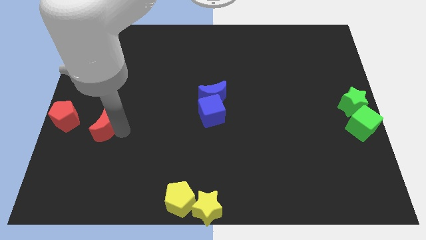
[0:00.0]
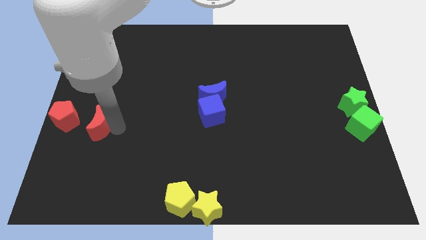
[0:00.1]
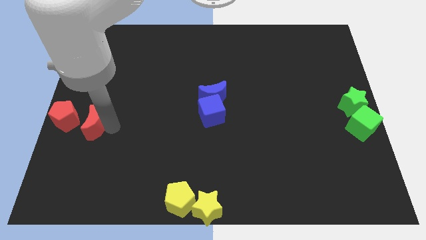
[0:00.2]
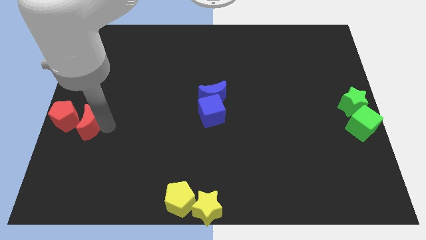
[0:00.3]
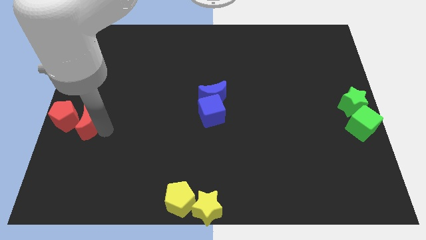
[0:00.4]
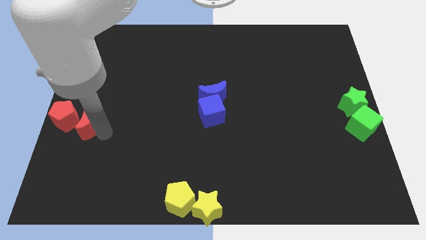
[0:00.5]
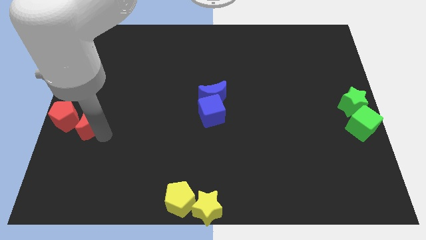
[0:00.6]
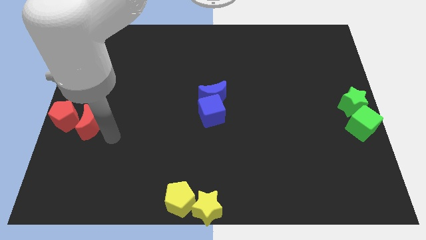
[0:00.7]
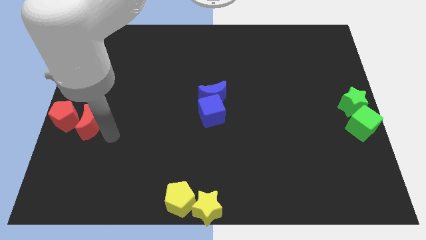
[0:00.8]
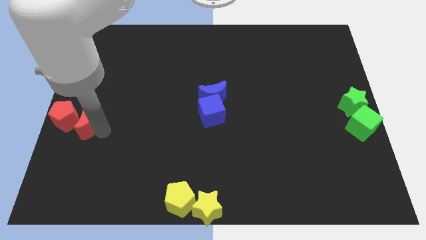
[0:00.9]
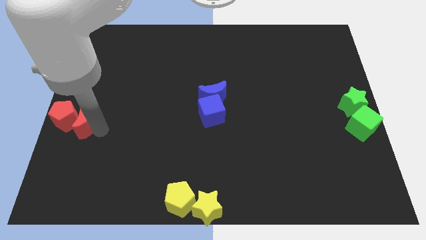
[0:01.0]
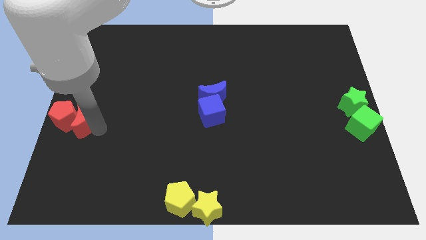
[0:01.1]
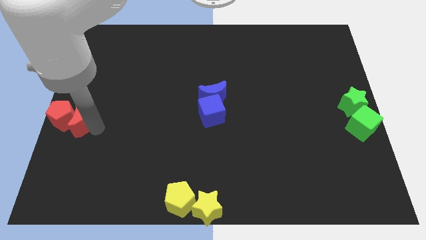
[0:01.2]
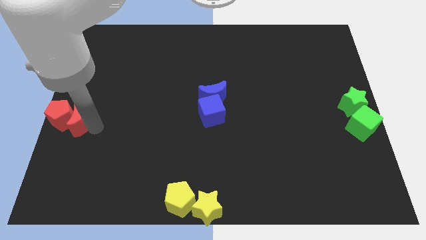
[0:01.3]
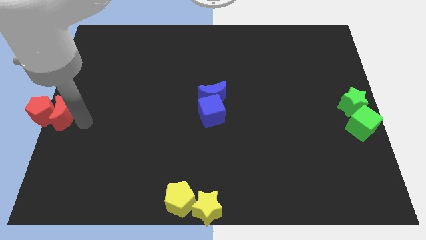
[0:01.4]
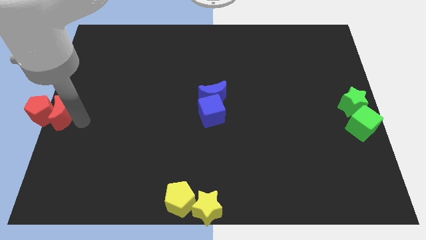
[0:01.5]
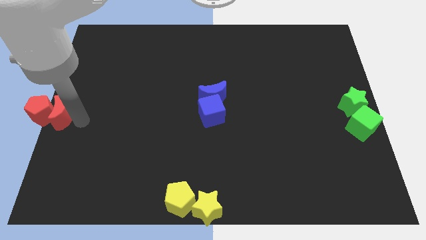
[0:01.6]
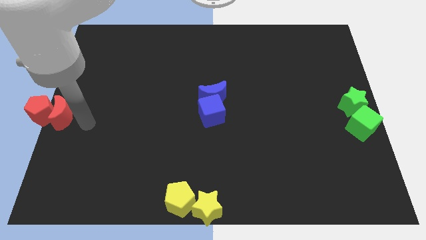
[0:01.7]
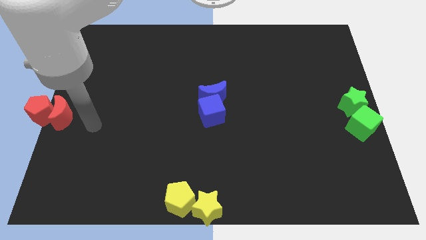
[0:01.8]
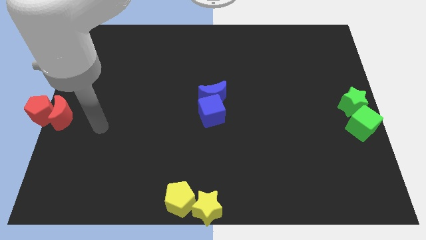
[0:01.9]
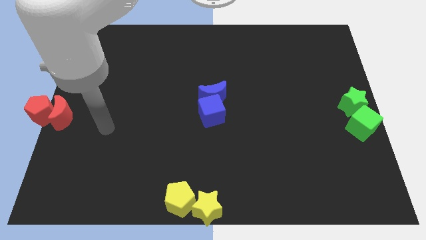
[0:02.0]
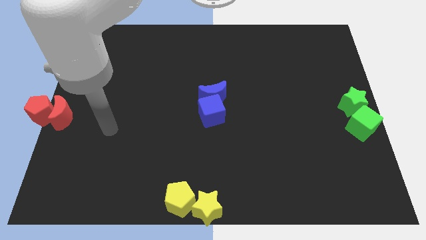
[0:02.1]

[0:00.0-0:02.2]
put the red pentagon into the red moon

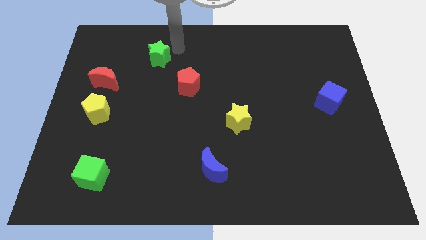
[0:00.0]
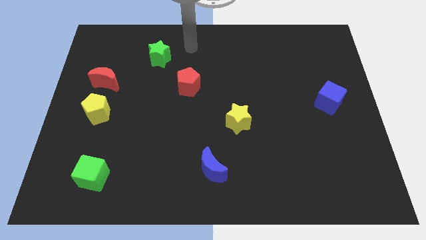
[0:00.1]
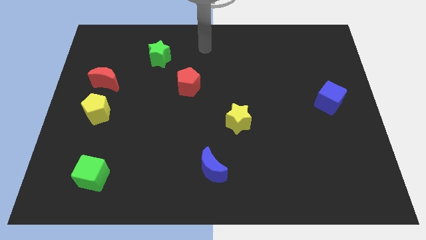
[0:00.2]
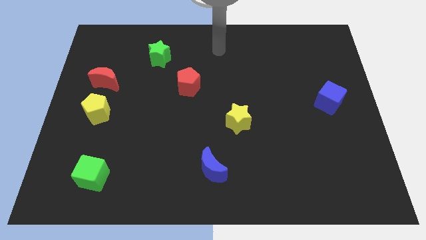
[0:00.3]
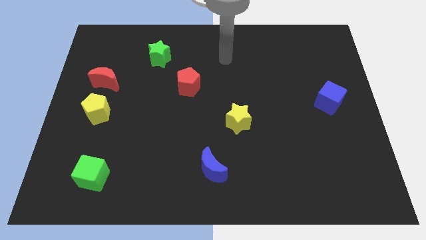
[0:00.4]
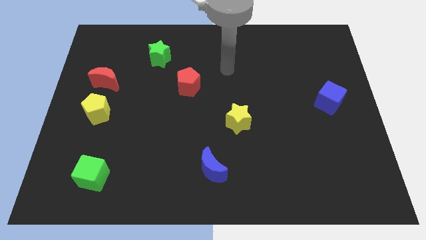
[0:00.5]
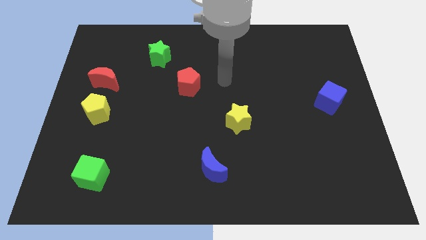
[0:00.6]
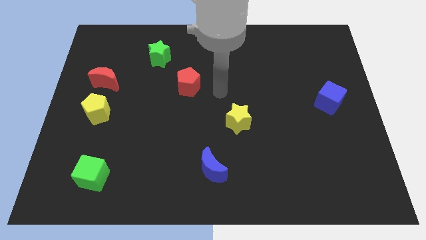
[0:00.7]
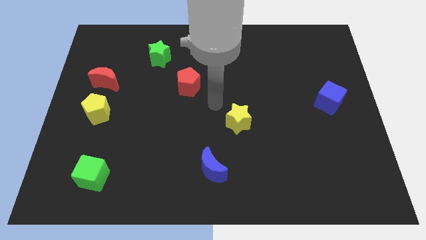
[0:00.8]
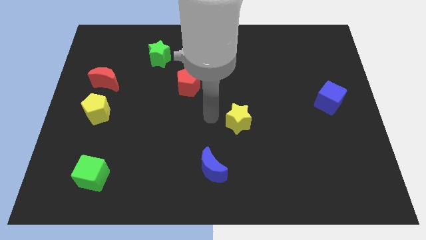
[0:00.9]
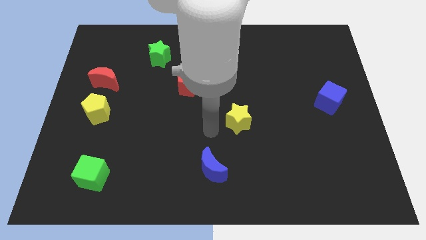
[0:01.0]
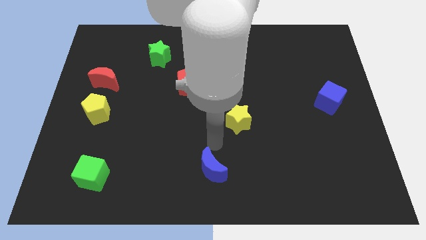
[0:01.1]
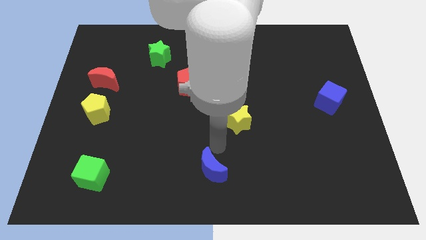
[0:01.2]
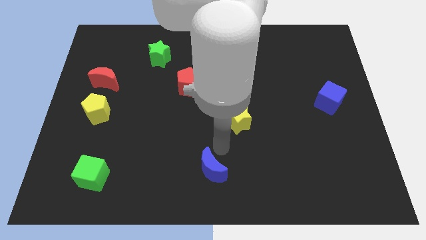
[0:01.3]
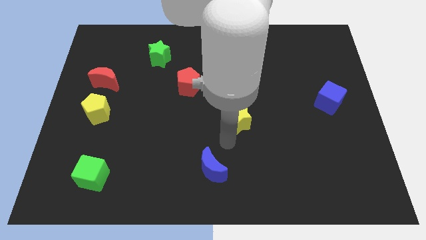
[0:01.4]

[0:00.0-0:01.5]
place your arm to the bottom of yellow star

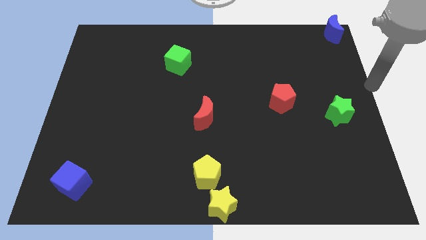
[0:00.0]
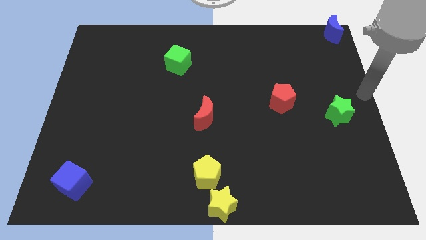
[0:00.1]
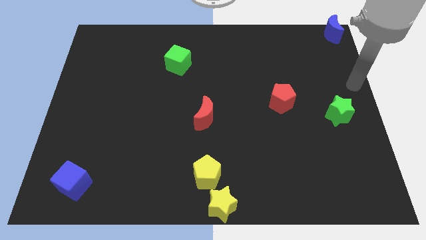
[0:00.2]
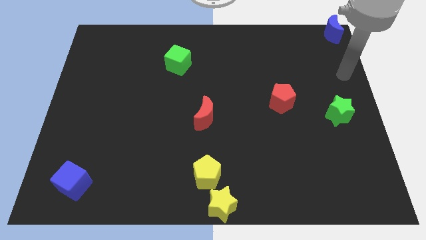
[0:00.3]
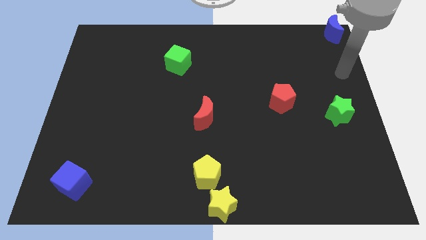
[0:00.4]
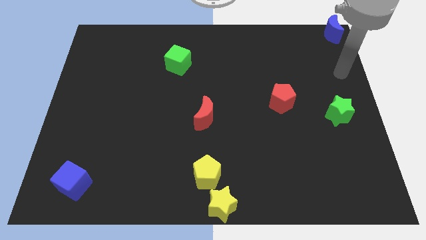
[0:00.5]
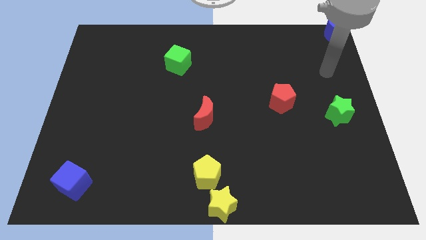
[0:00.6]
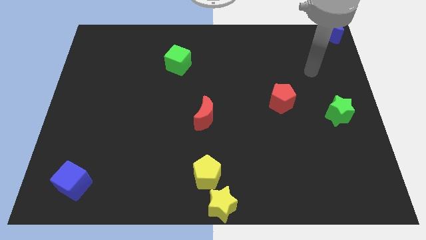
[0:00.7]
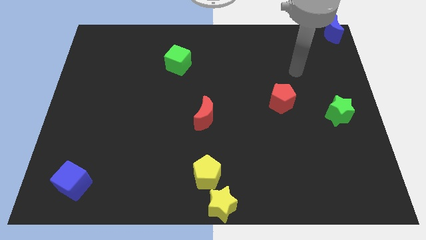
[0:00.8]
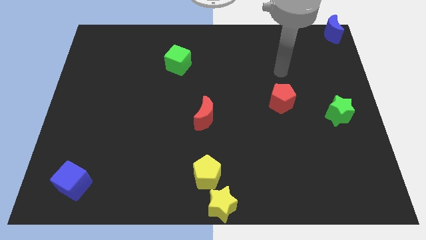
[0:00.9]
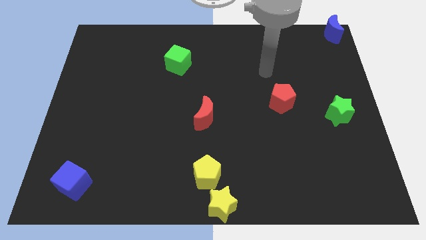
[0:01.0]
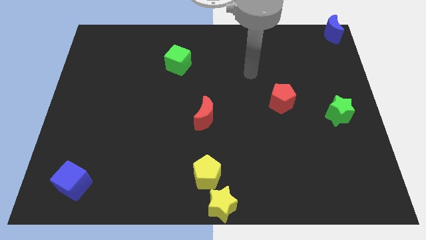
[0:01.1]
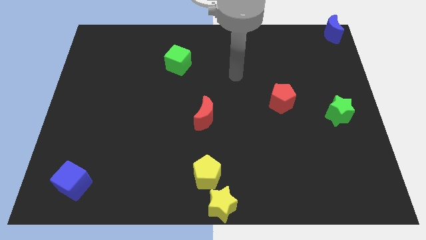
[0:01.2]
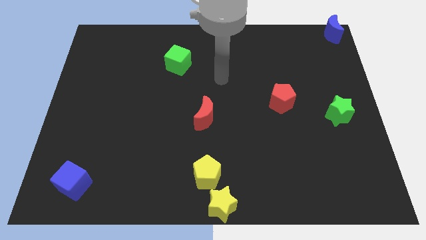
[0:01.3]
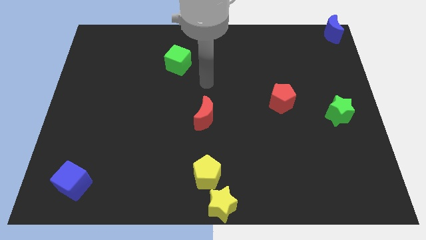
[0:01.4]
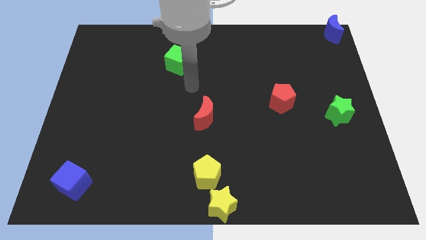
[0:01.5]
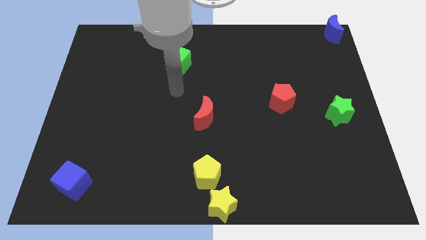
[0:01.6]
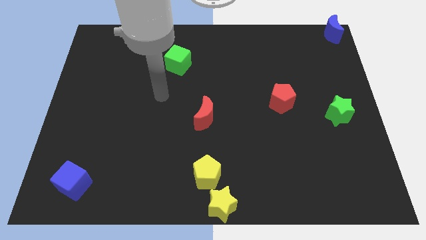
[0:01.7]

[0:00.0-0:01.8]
move your arm towards the green cube

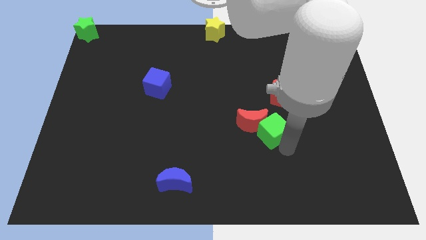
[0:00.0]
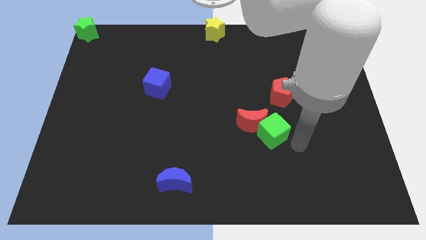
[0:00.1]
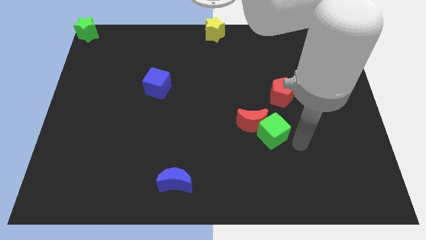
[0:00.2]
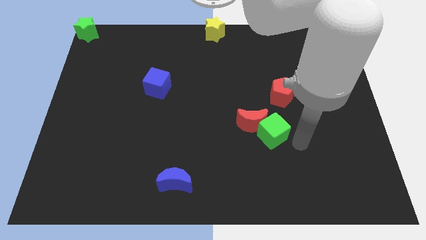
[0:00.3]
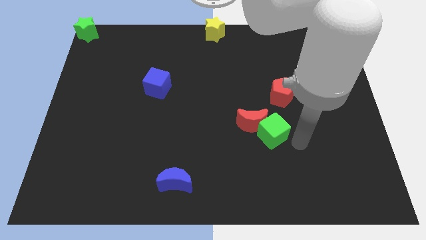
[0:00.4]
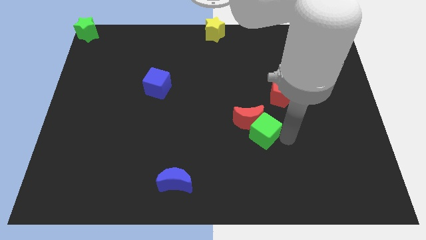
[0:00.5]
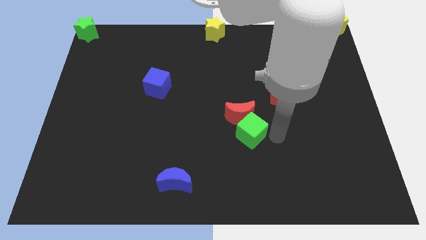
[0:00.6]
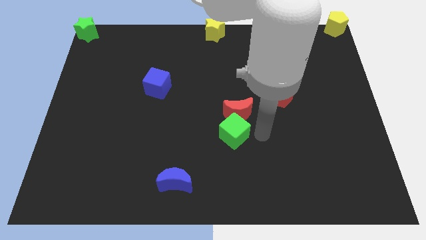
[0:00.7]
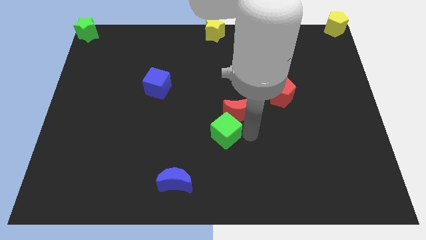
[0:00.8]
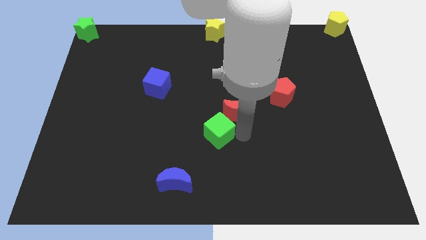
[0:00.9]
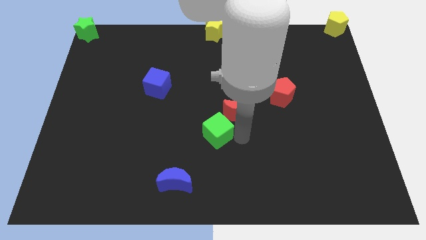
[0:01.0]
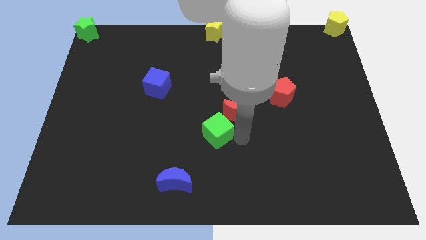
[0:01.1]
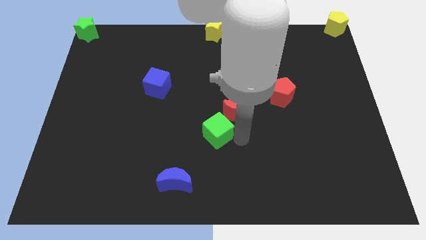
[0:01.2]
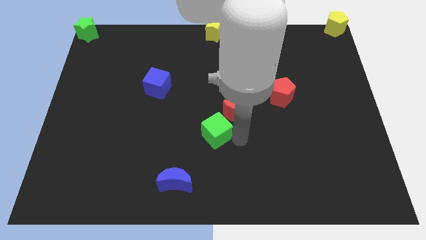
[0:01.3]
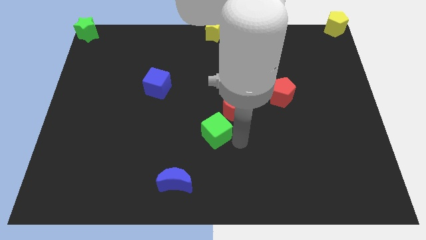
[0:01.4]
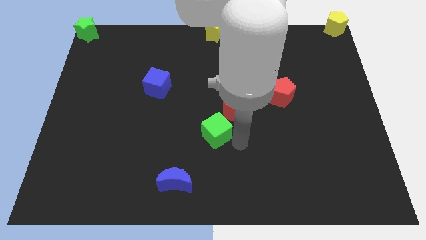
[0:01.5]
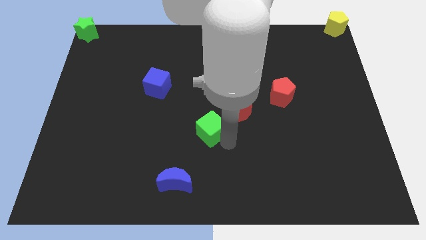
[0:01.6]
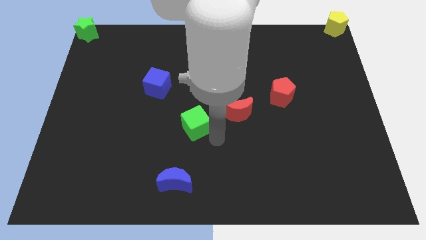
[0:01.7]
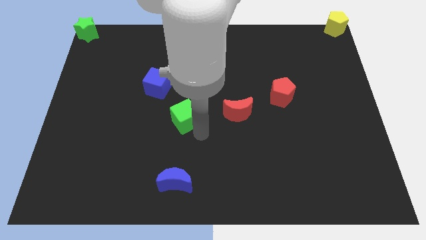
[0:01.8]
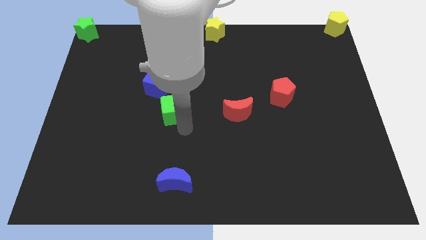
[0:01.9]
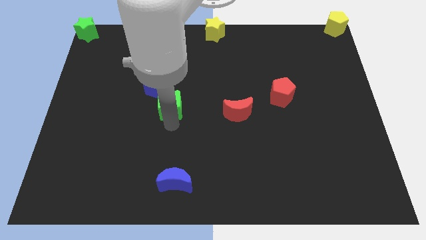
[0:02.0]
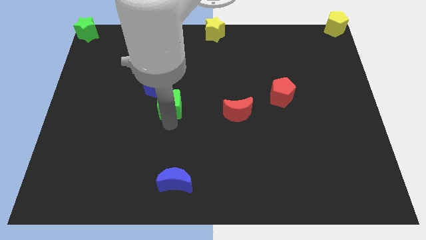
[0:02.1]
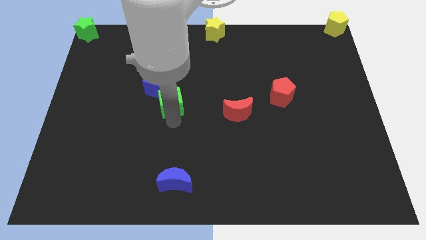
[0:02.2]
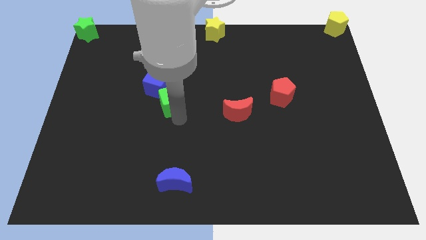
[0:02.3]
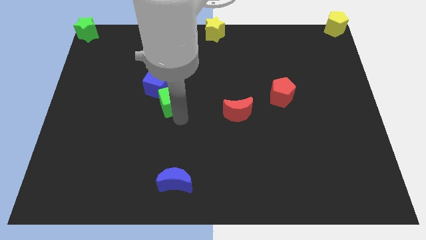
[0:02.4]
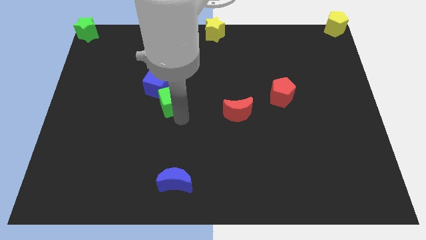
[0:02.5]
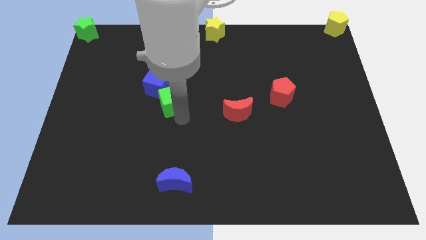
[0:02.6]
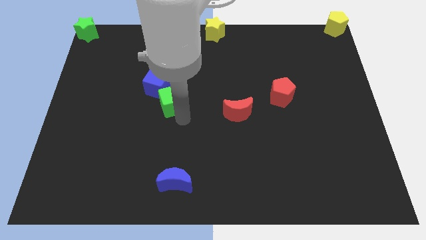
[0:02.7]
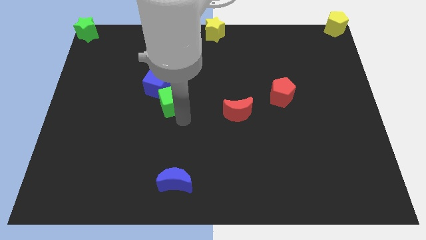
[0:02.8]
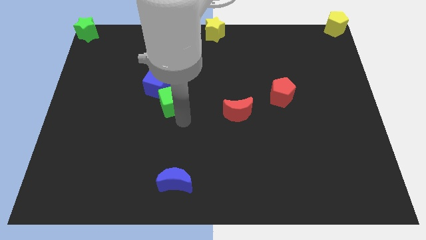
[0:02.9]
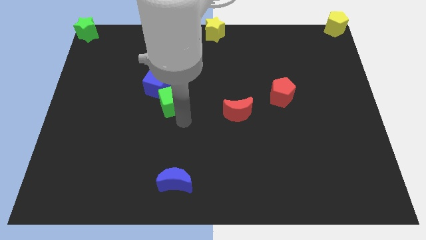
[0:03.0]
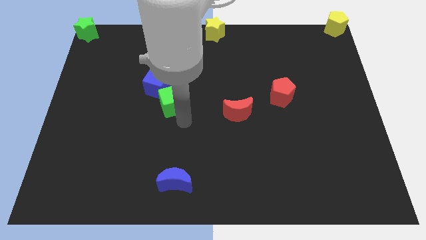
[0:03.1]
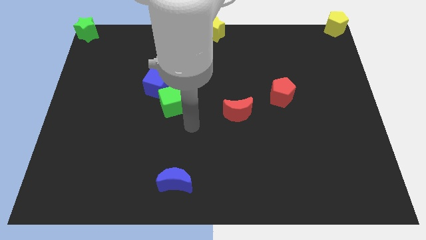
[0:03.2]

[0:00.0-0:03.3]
push the green cube to the bottom right of the blue cube

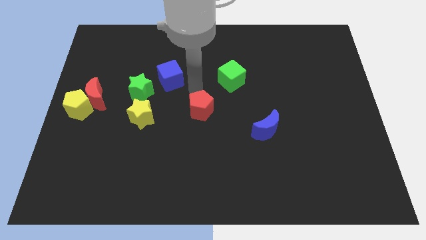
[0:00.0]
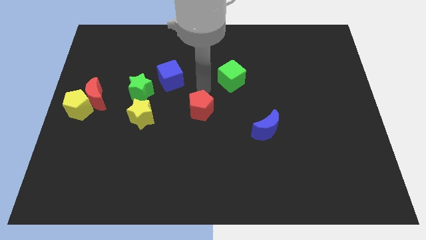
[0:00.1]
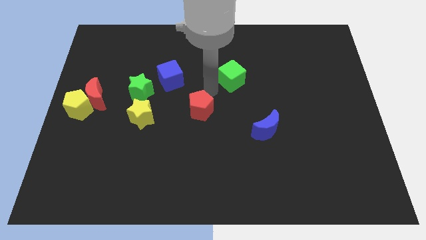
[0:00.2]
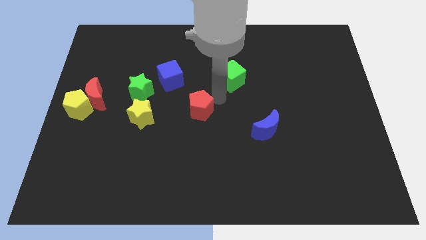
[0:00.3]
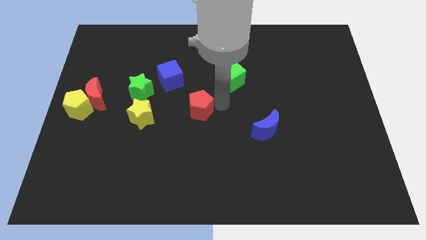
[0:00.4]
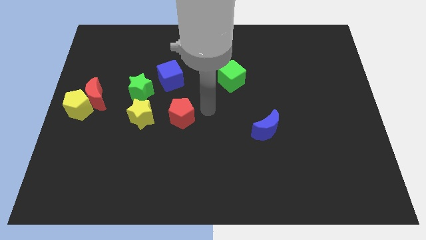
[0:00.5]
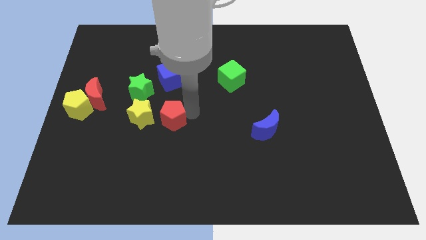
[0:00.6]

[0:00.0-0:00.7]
move the red pentagon below the blue cube
